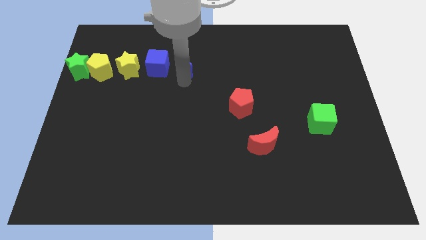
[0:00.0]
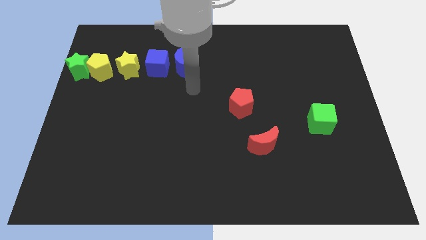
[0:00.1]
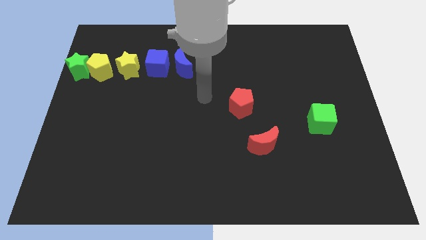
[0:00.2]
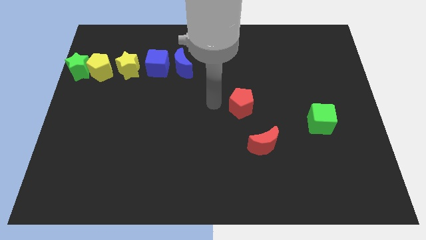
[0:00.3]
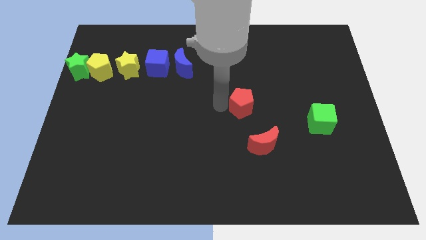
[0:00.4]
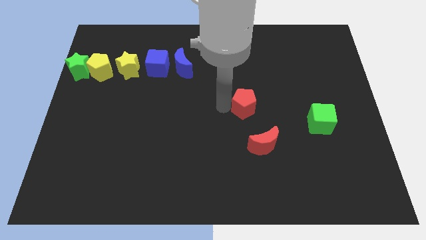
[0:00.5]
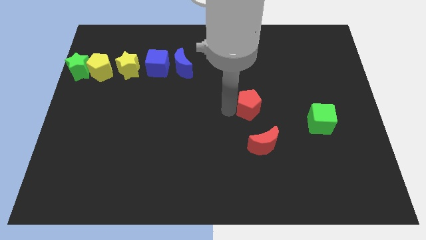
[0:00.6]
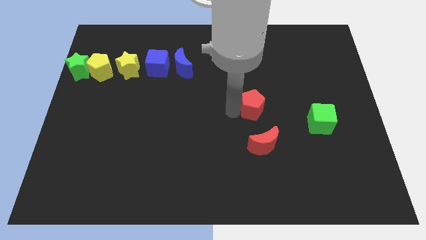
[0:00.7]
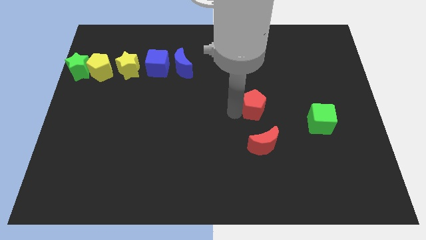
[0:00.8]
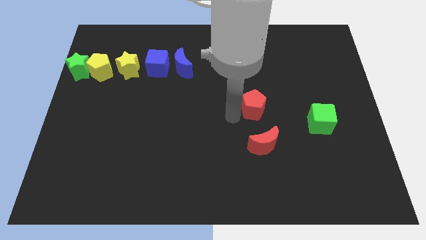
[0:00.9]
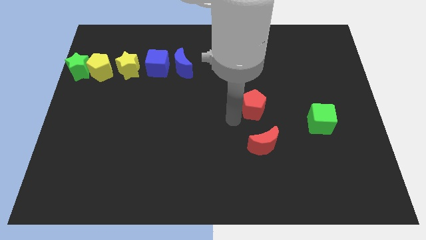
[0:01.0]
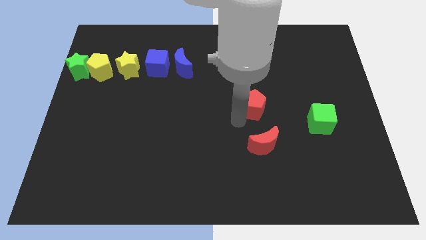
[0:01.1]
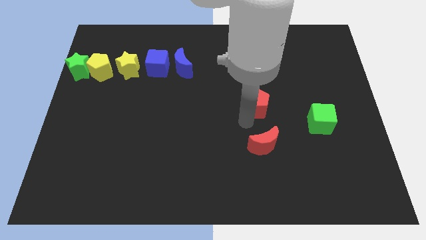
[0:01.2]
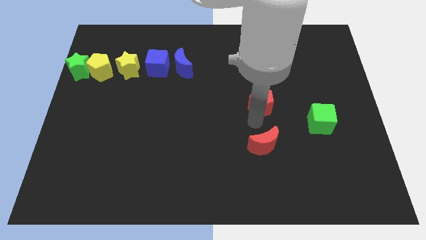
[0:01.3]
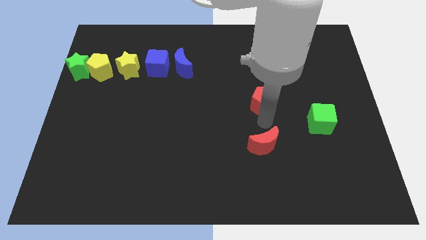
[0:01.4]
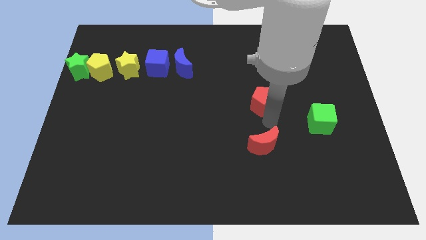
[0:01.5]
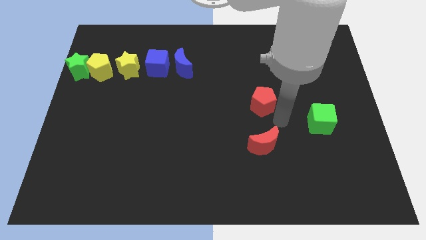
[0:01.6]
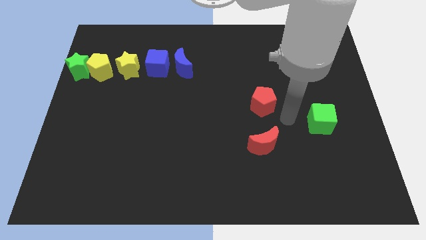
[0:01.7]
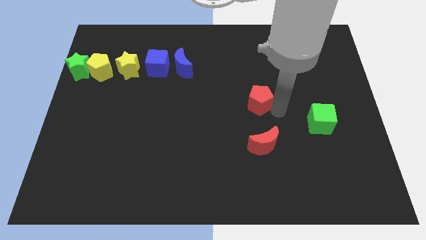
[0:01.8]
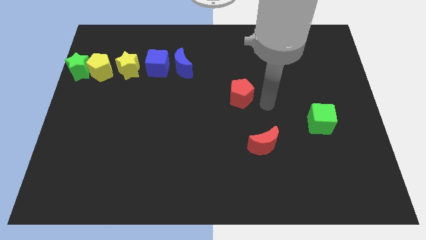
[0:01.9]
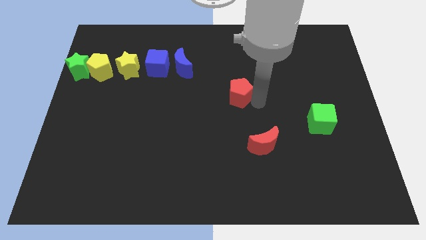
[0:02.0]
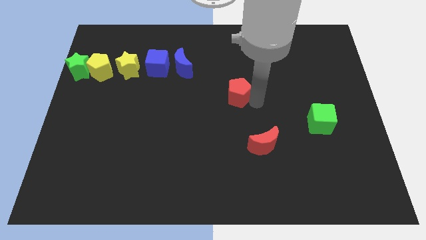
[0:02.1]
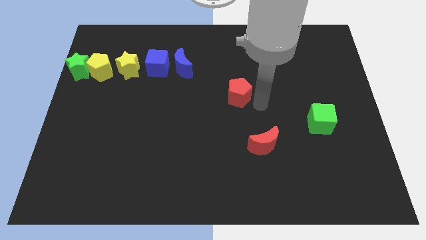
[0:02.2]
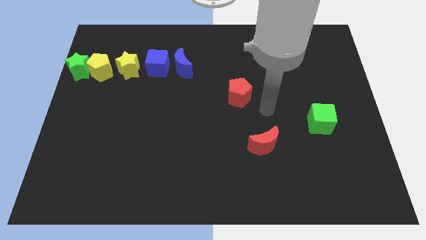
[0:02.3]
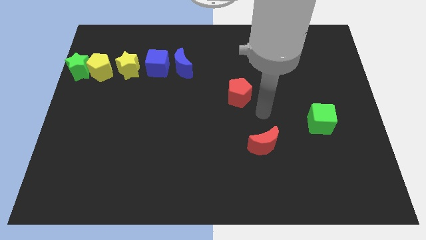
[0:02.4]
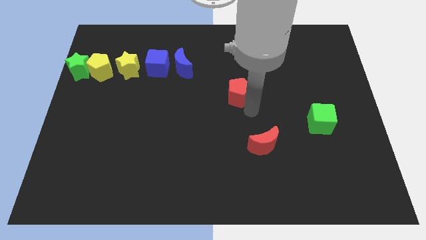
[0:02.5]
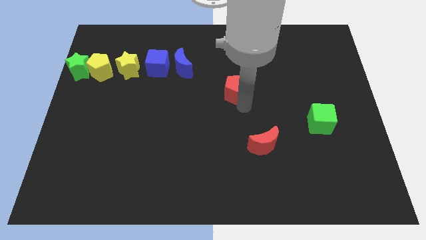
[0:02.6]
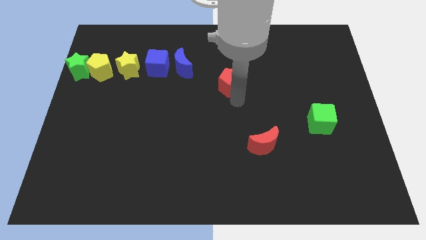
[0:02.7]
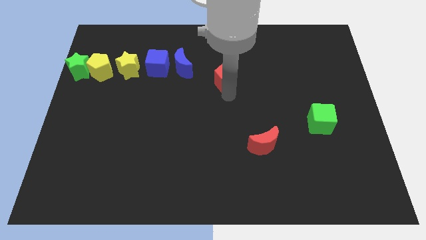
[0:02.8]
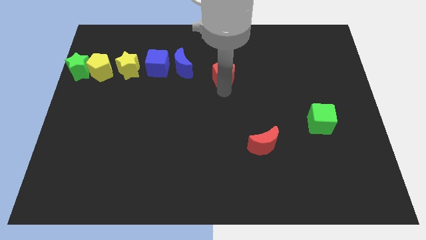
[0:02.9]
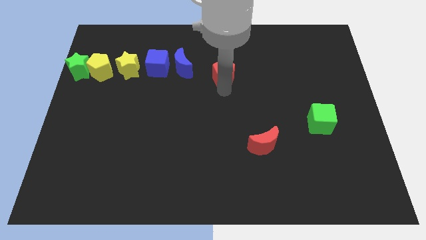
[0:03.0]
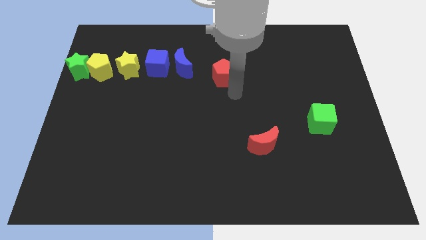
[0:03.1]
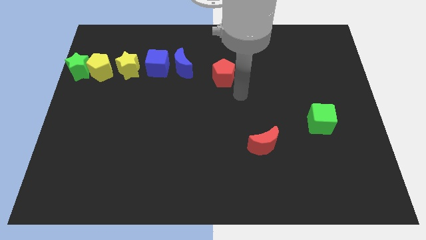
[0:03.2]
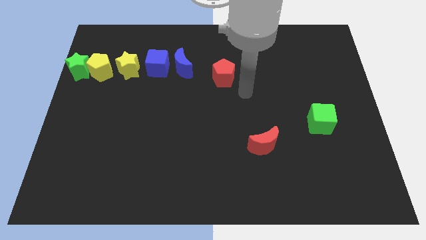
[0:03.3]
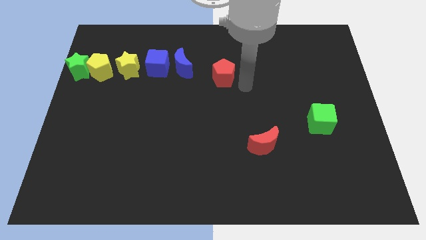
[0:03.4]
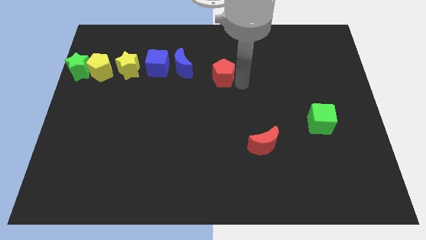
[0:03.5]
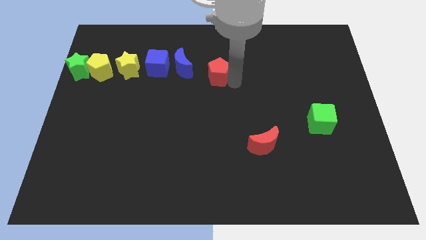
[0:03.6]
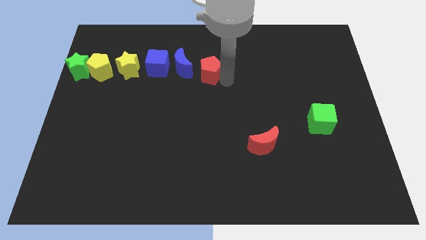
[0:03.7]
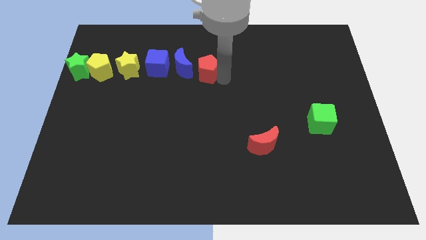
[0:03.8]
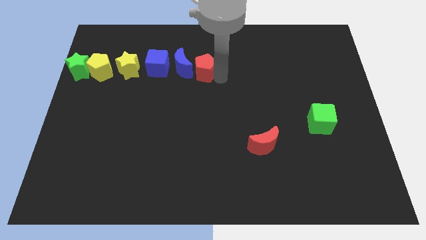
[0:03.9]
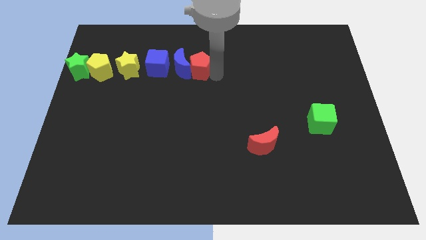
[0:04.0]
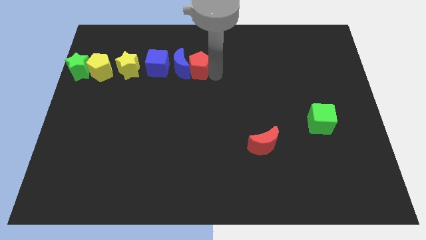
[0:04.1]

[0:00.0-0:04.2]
move the red pentagon to the right of the blue crescent

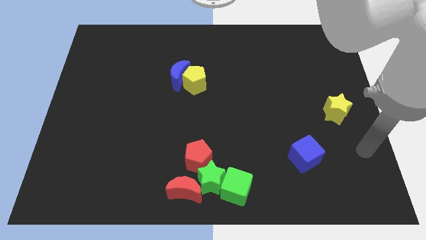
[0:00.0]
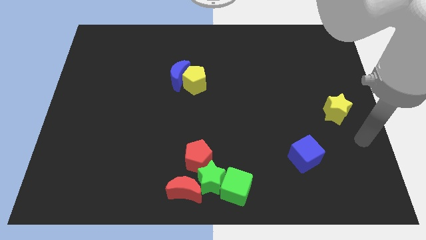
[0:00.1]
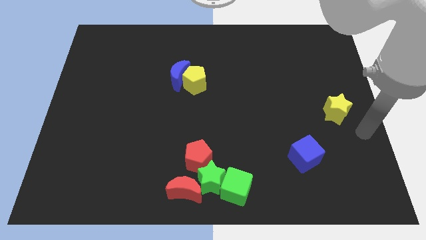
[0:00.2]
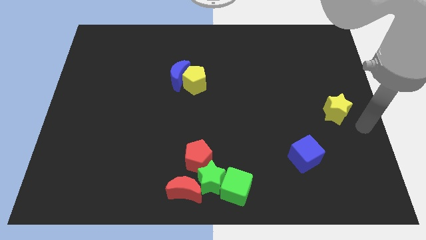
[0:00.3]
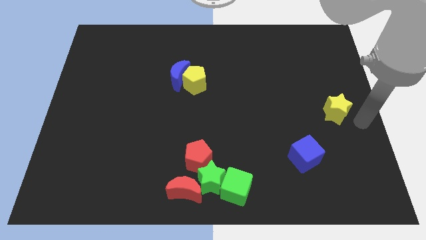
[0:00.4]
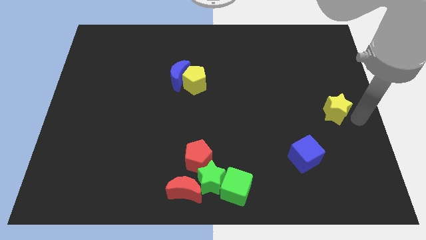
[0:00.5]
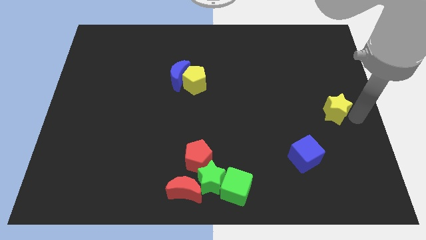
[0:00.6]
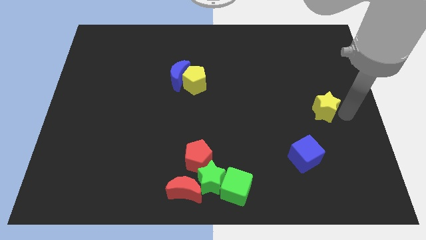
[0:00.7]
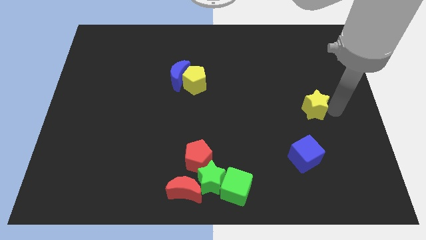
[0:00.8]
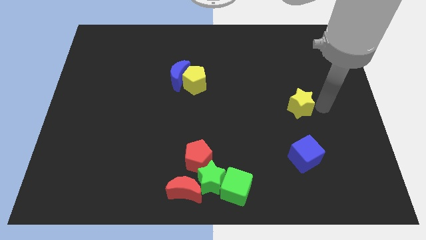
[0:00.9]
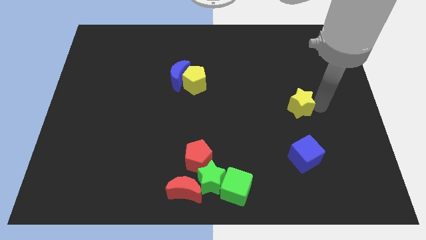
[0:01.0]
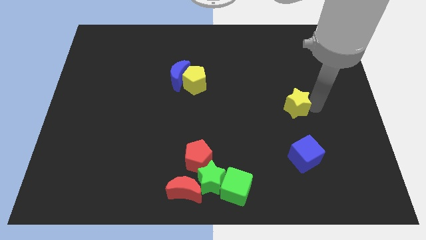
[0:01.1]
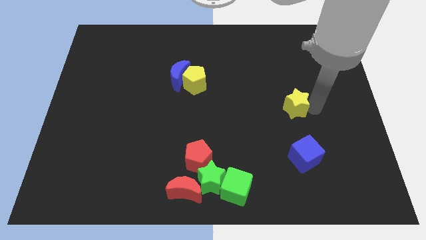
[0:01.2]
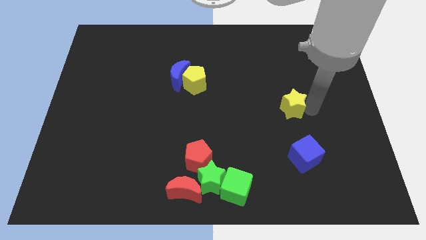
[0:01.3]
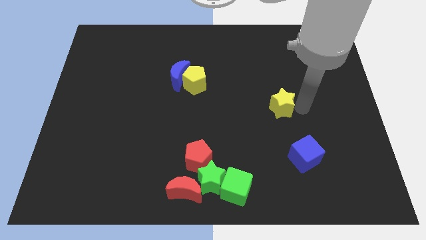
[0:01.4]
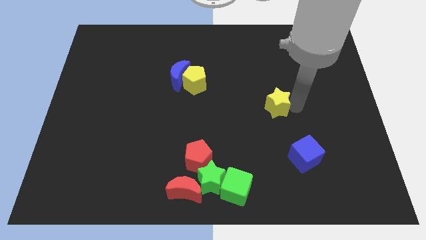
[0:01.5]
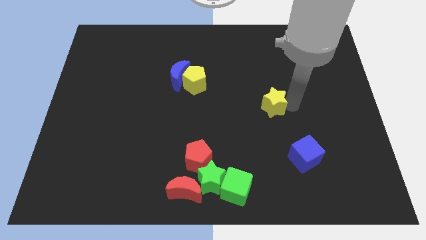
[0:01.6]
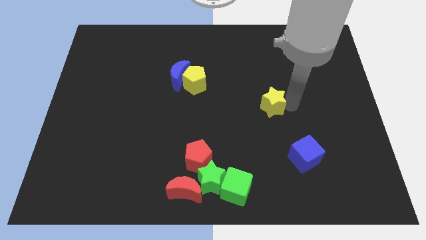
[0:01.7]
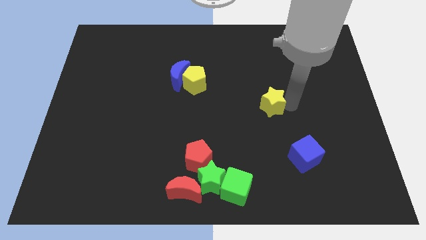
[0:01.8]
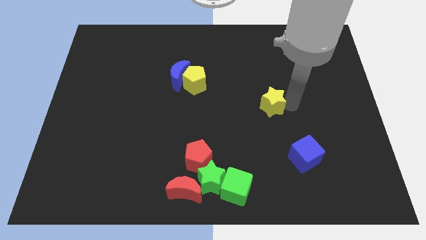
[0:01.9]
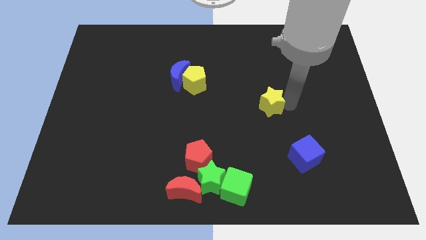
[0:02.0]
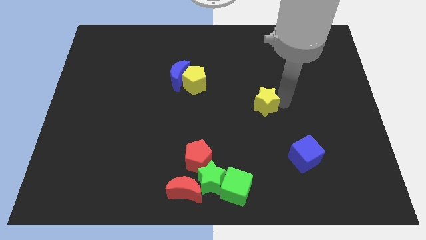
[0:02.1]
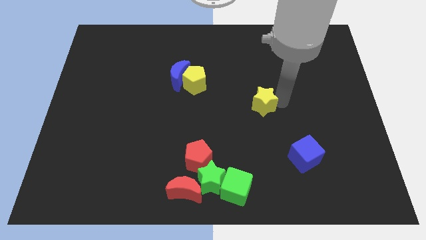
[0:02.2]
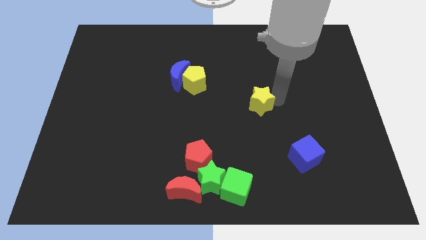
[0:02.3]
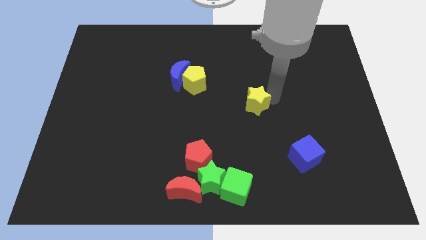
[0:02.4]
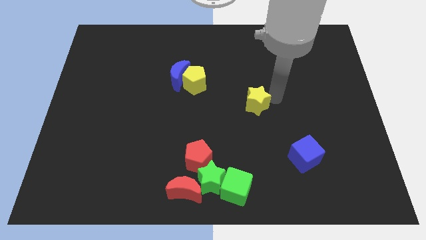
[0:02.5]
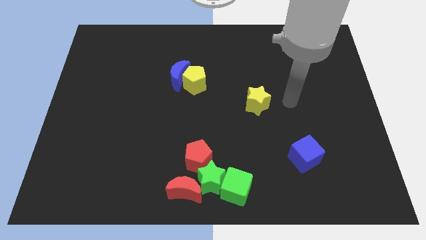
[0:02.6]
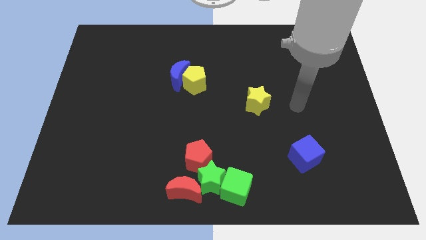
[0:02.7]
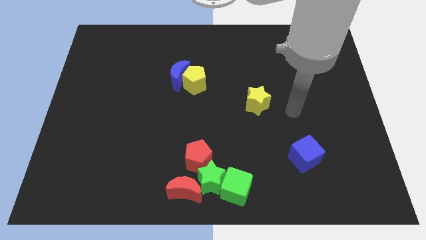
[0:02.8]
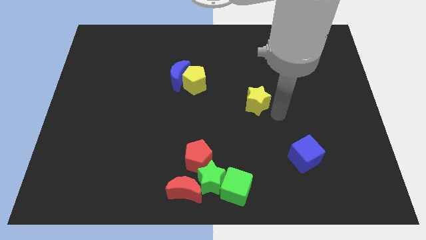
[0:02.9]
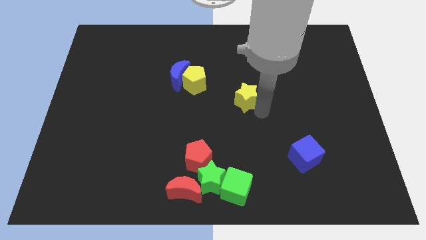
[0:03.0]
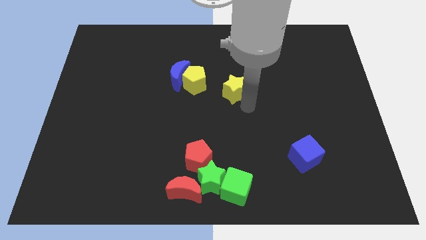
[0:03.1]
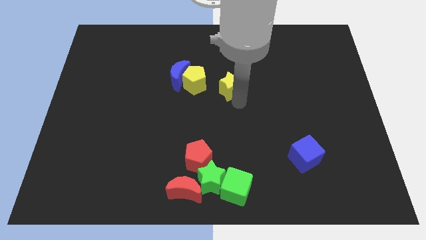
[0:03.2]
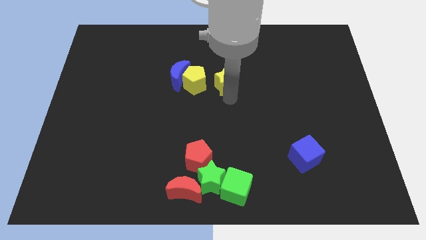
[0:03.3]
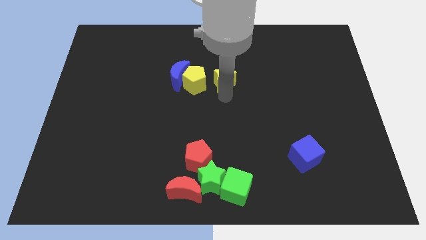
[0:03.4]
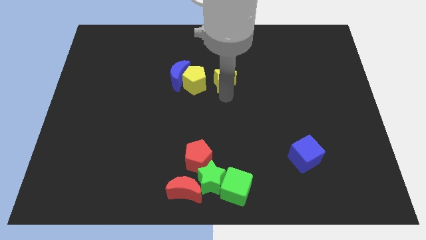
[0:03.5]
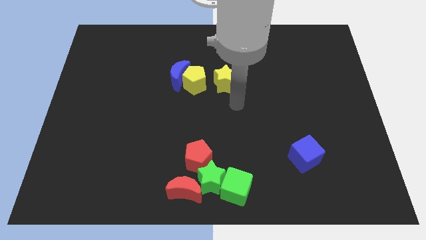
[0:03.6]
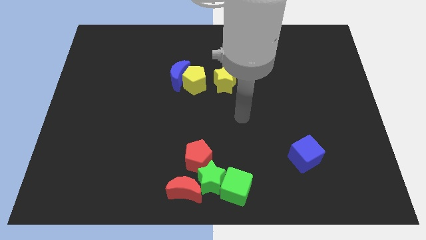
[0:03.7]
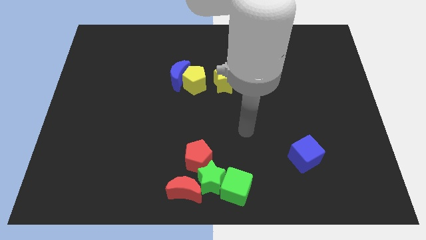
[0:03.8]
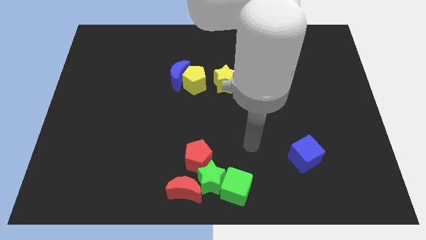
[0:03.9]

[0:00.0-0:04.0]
put yellow star parallel right to the yellow pentagon

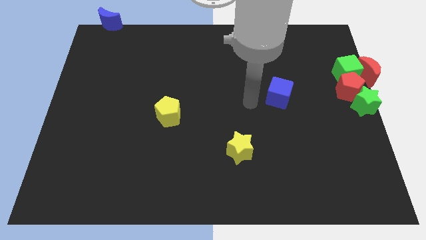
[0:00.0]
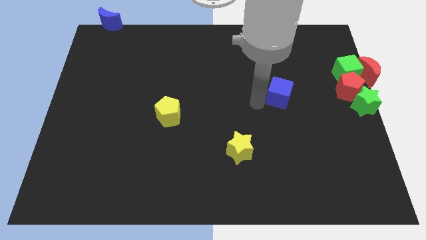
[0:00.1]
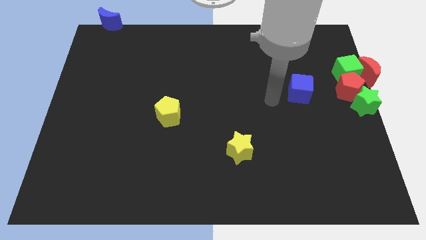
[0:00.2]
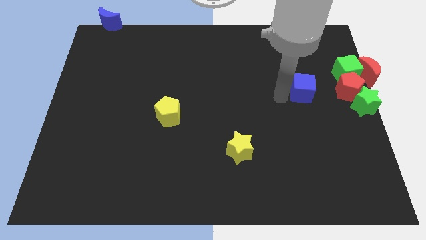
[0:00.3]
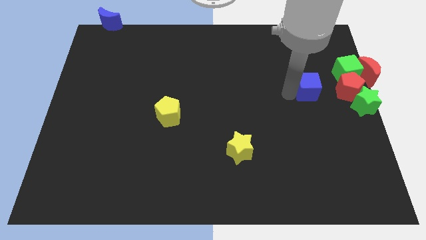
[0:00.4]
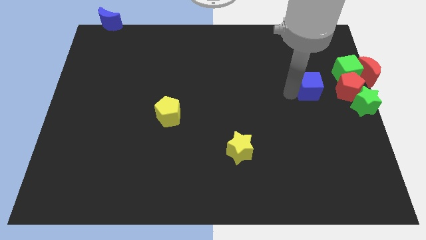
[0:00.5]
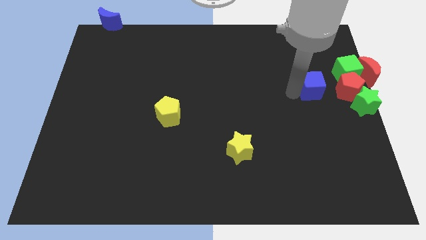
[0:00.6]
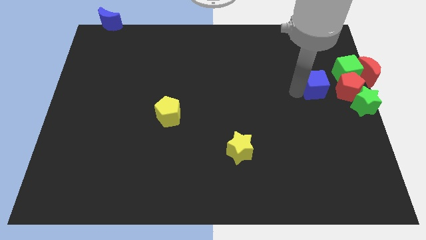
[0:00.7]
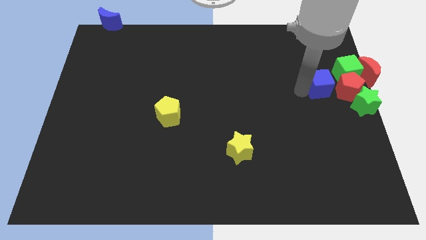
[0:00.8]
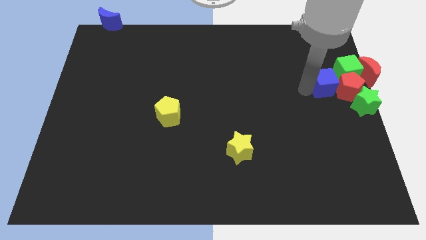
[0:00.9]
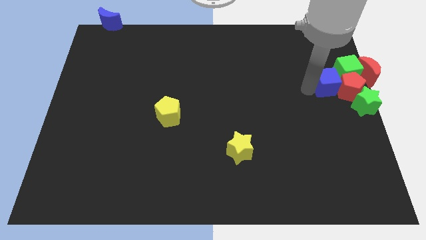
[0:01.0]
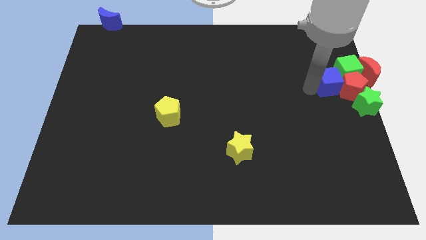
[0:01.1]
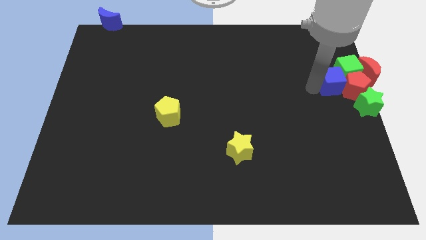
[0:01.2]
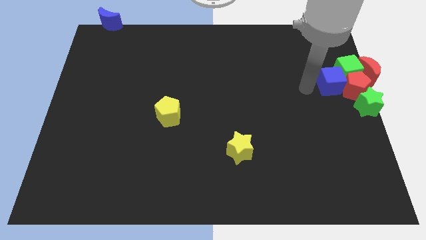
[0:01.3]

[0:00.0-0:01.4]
move the blue cube into the group of blocks
